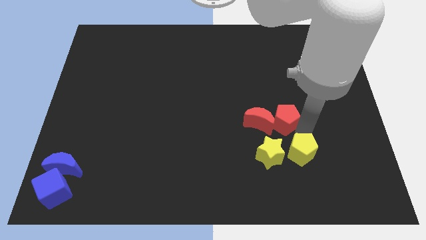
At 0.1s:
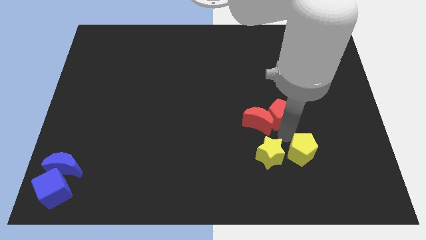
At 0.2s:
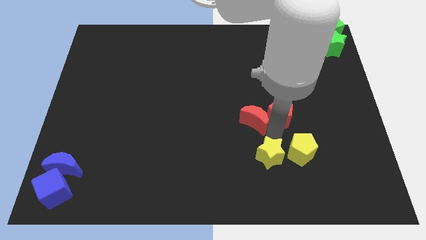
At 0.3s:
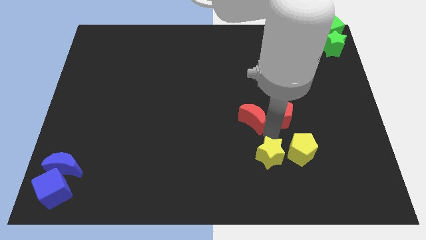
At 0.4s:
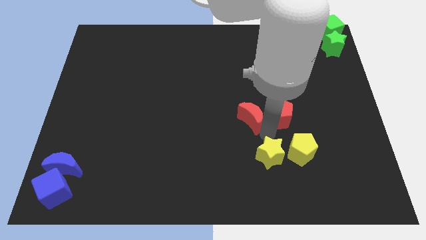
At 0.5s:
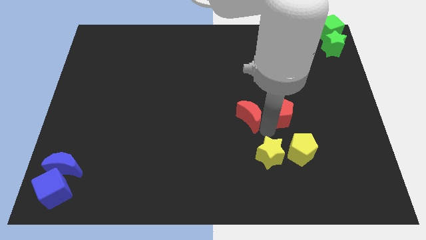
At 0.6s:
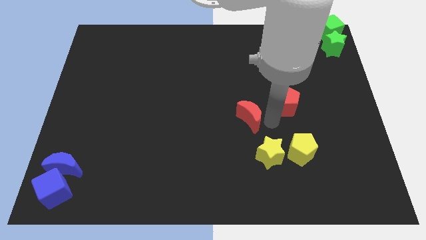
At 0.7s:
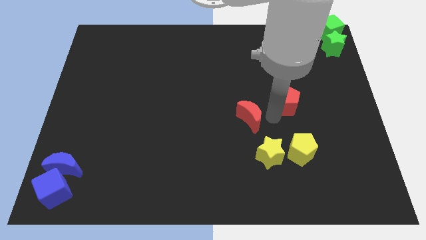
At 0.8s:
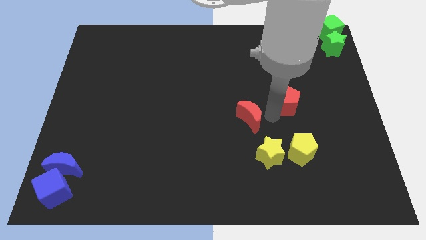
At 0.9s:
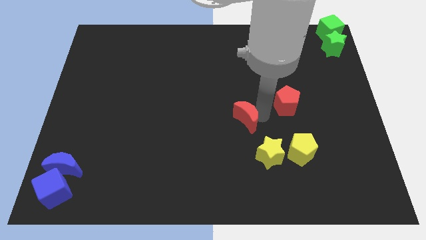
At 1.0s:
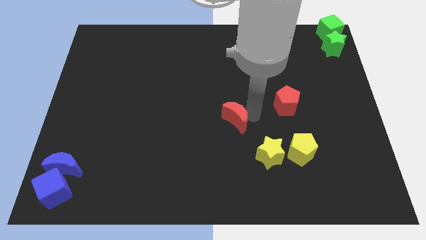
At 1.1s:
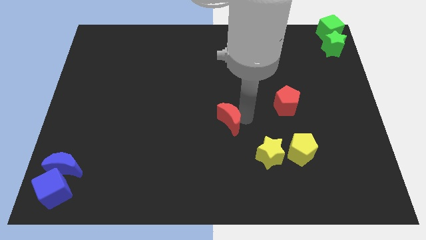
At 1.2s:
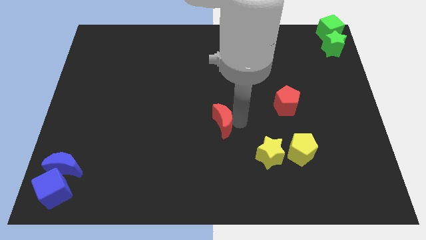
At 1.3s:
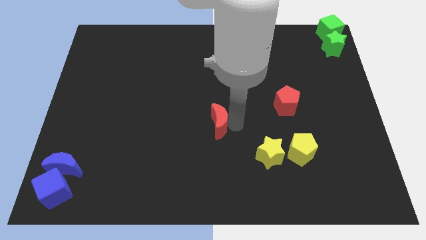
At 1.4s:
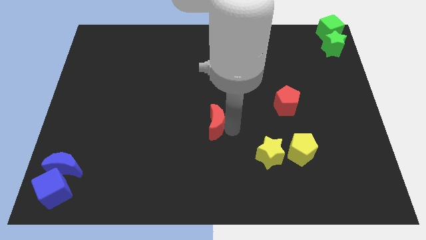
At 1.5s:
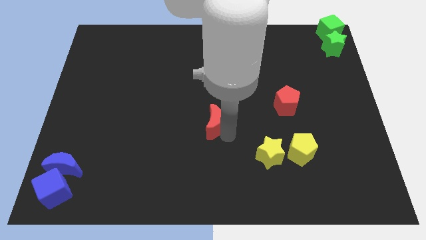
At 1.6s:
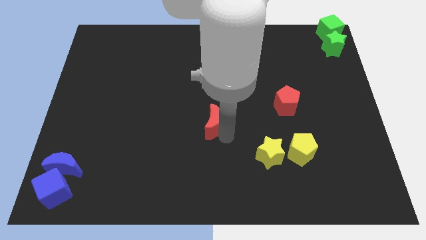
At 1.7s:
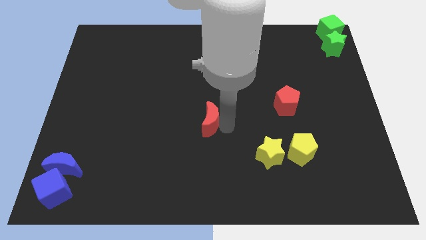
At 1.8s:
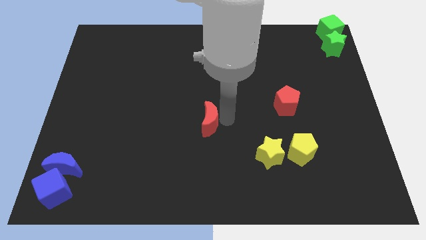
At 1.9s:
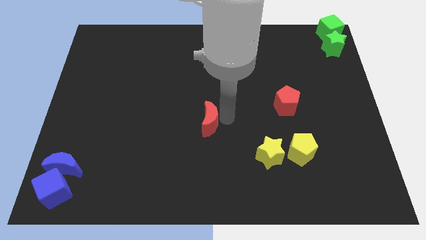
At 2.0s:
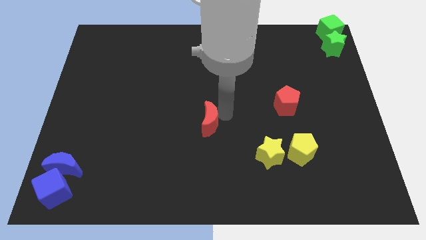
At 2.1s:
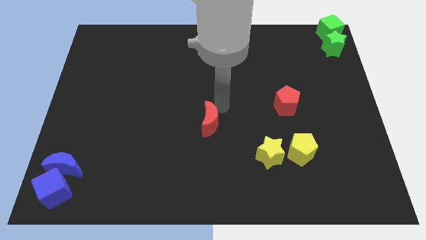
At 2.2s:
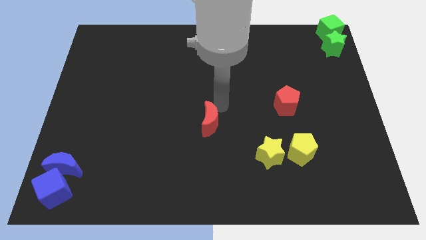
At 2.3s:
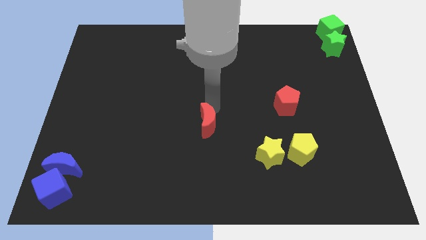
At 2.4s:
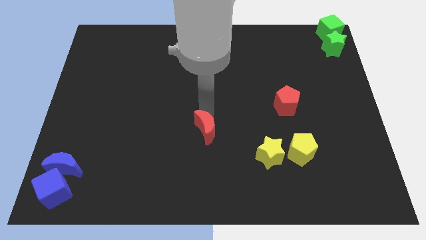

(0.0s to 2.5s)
separate the red moon and red pentagon

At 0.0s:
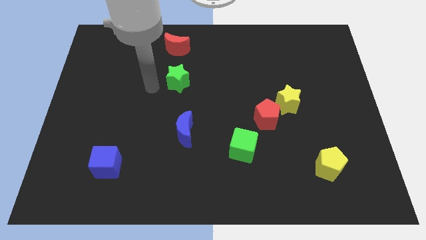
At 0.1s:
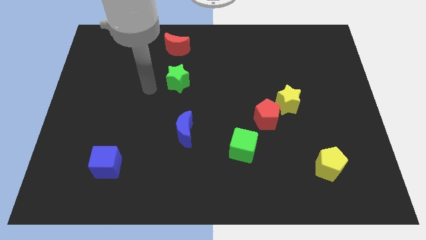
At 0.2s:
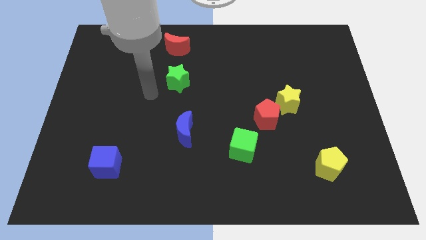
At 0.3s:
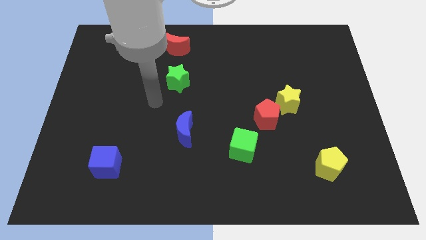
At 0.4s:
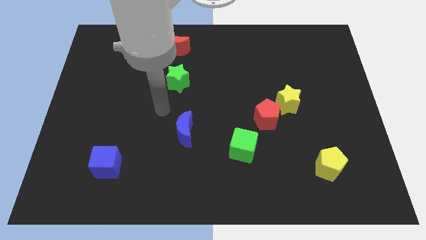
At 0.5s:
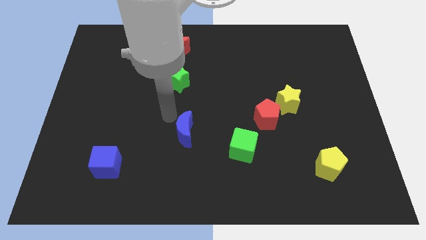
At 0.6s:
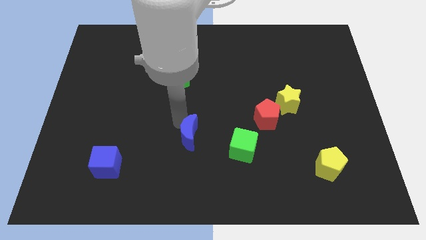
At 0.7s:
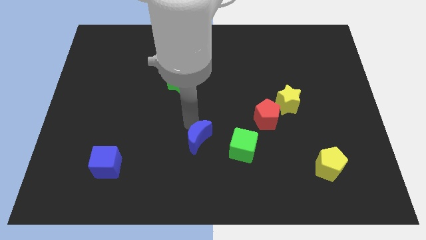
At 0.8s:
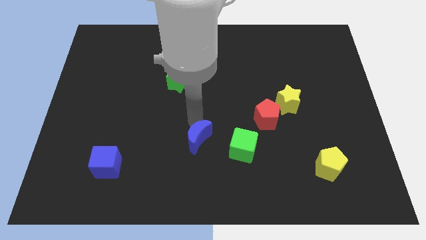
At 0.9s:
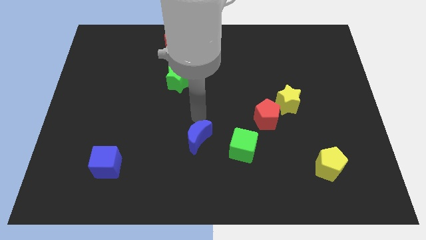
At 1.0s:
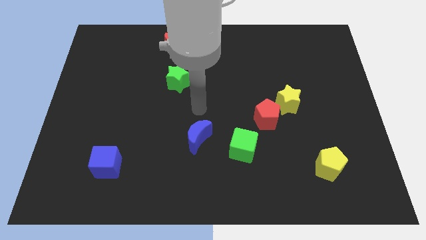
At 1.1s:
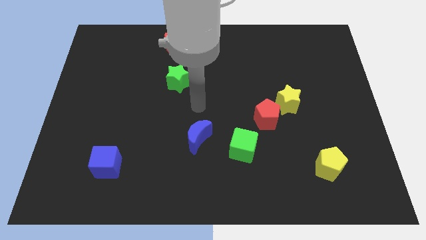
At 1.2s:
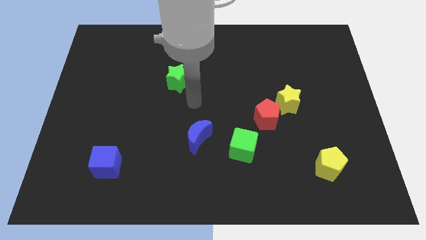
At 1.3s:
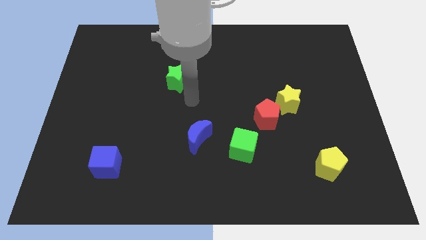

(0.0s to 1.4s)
push the blue moon towards green cube

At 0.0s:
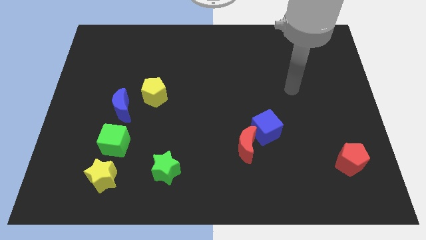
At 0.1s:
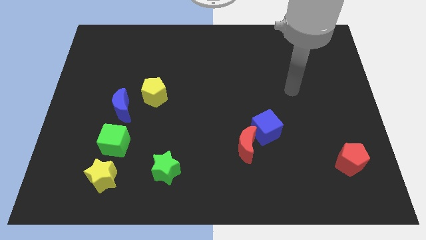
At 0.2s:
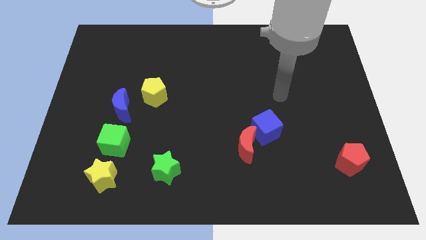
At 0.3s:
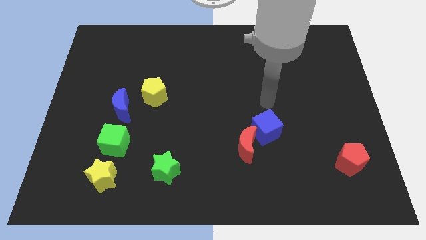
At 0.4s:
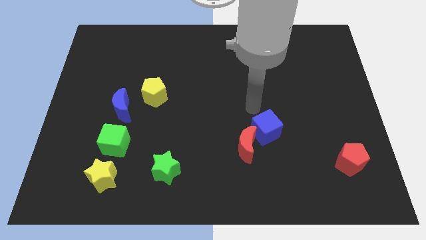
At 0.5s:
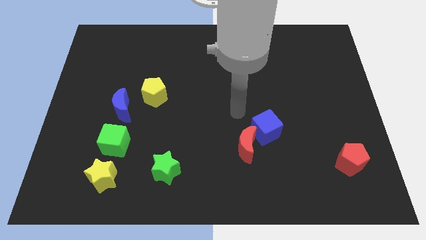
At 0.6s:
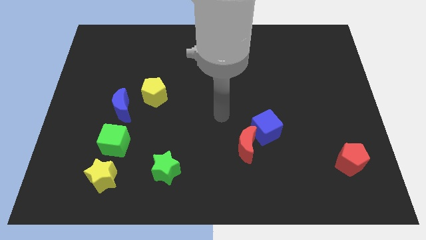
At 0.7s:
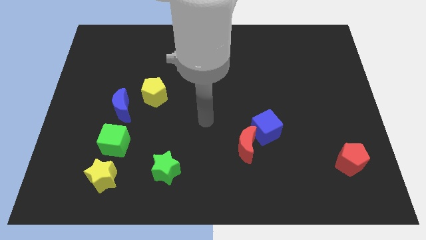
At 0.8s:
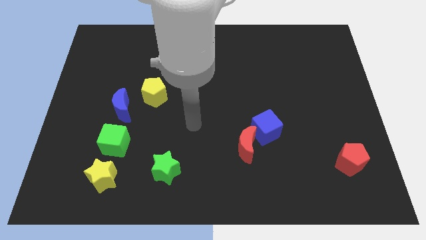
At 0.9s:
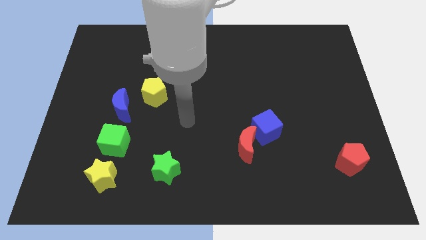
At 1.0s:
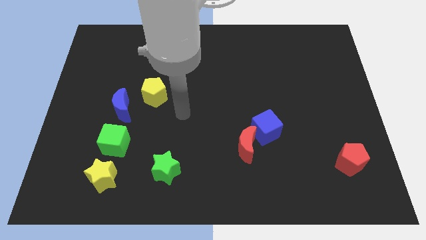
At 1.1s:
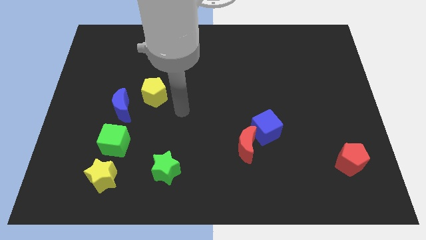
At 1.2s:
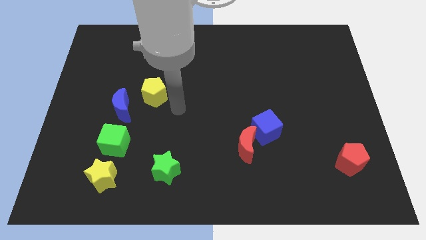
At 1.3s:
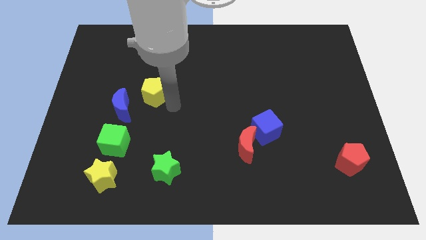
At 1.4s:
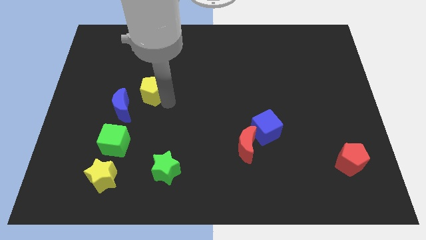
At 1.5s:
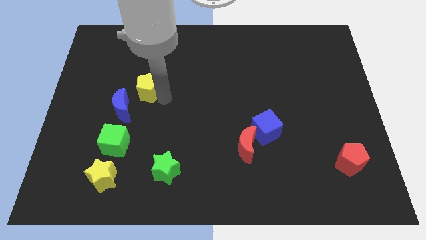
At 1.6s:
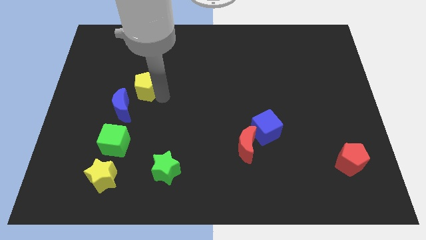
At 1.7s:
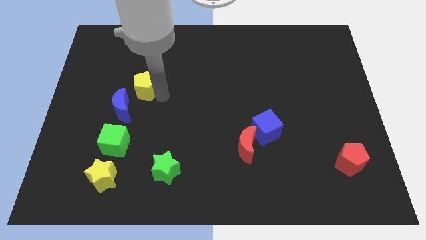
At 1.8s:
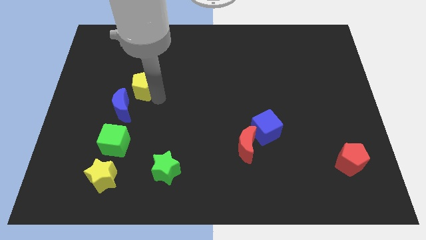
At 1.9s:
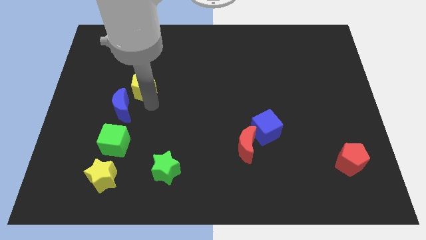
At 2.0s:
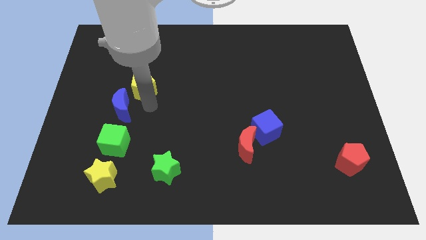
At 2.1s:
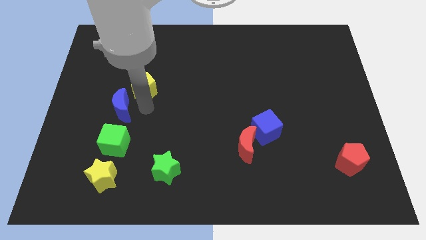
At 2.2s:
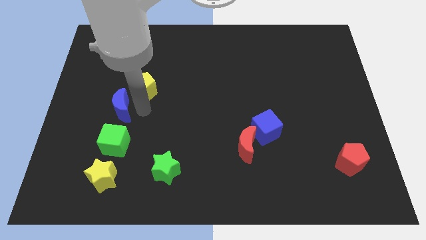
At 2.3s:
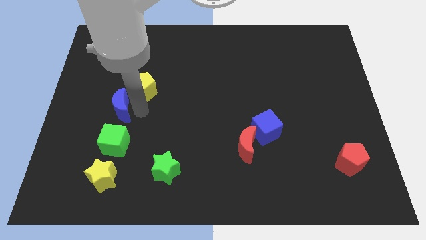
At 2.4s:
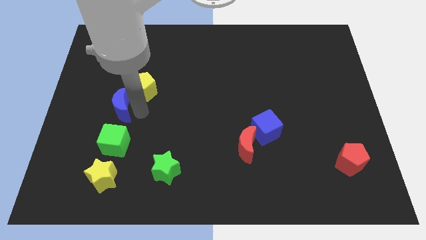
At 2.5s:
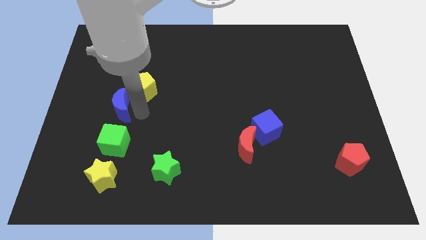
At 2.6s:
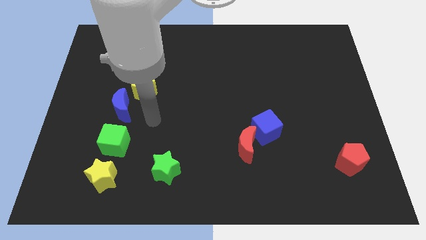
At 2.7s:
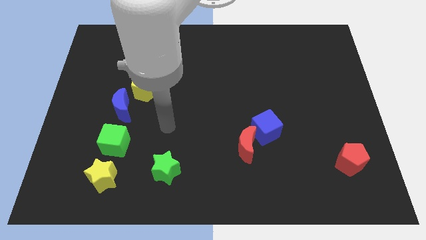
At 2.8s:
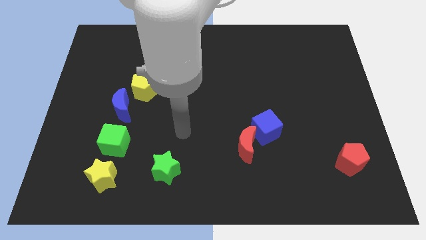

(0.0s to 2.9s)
slightly push the yellow pentagon towards the left of the board

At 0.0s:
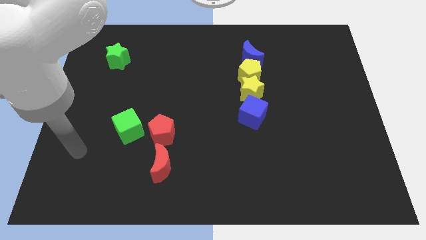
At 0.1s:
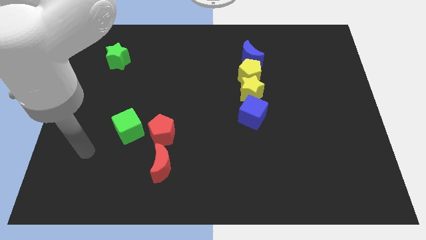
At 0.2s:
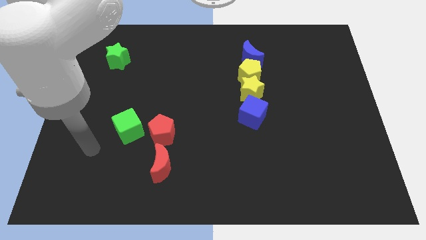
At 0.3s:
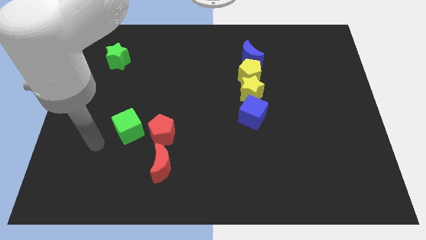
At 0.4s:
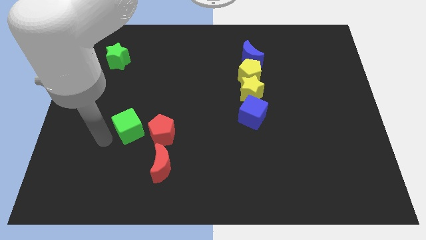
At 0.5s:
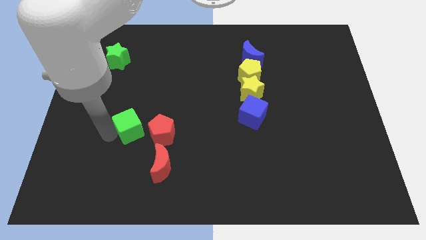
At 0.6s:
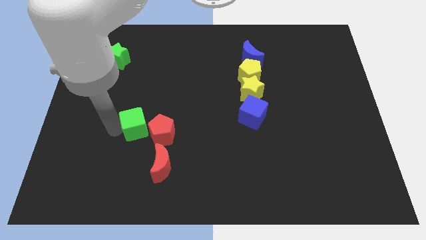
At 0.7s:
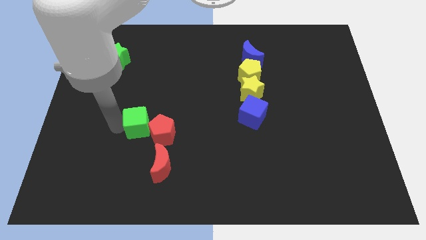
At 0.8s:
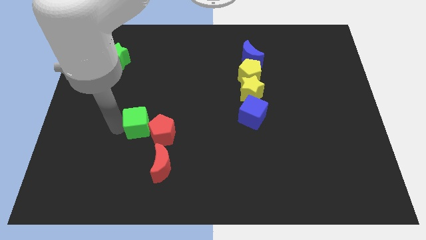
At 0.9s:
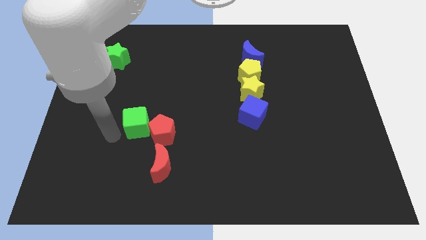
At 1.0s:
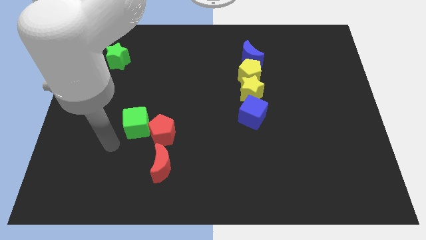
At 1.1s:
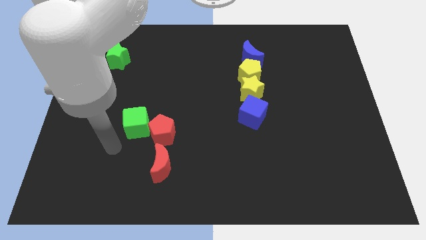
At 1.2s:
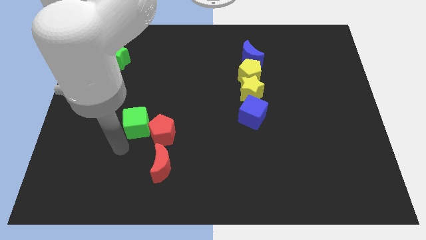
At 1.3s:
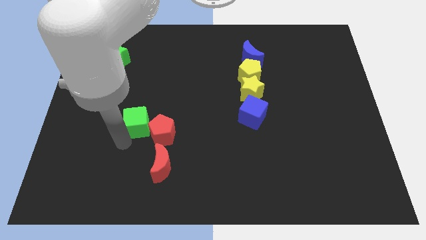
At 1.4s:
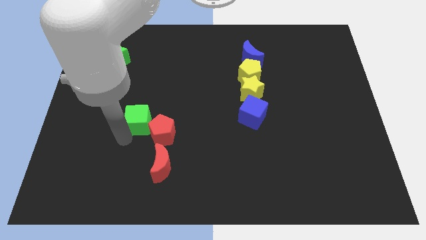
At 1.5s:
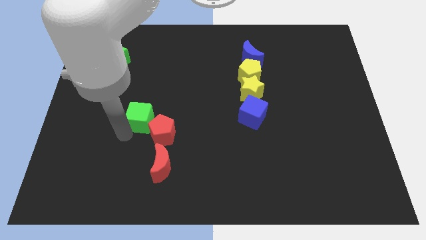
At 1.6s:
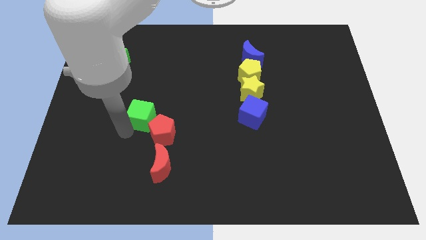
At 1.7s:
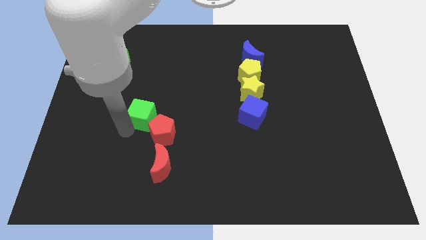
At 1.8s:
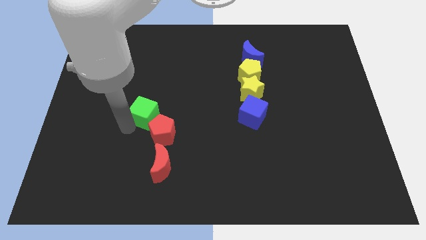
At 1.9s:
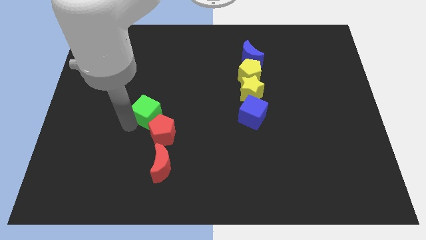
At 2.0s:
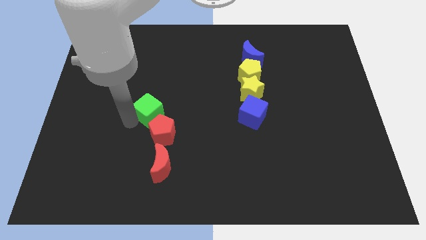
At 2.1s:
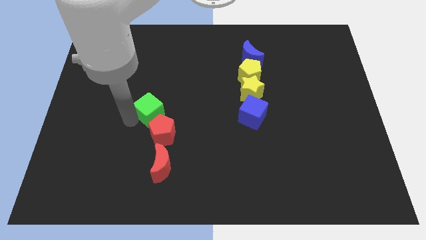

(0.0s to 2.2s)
place the green cube to the top of red pentagon
